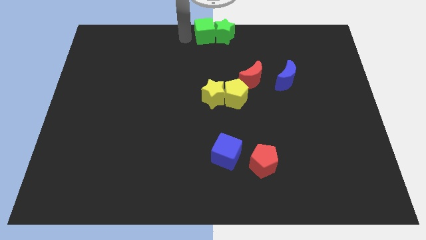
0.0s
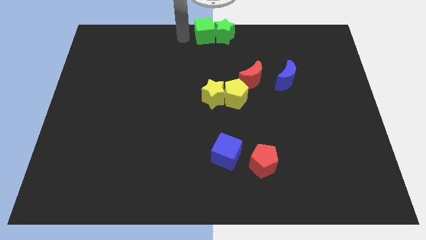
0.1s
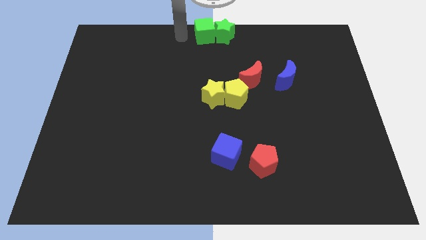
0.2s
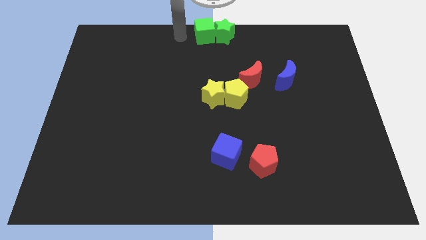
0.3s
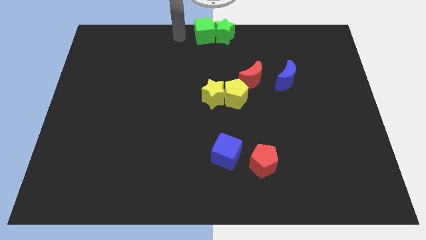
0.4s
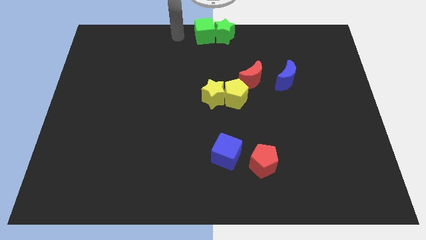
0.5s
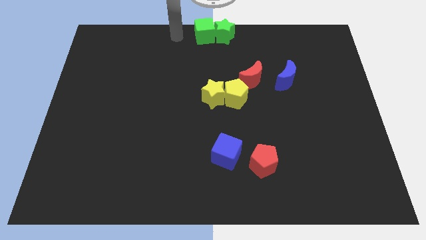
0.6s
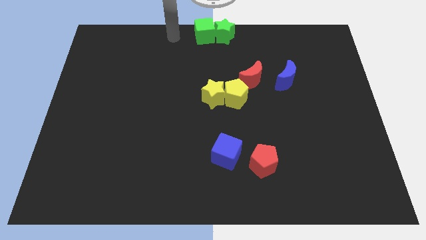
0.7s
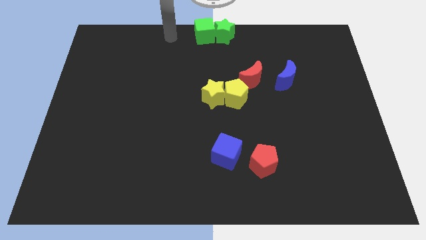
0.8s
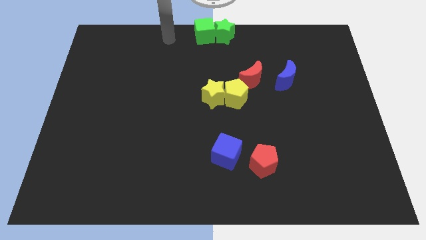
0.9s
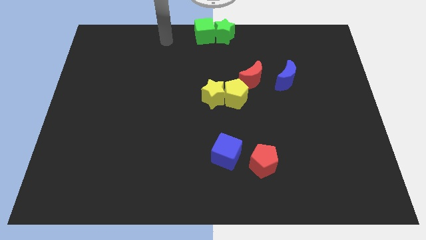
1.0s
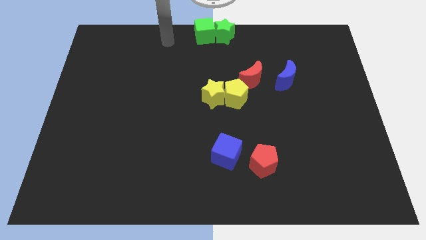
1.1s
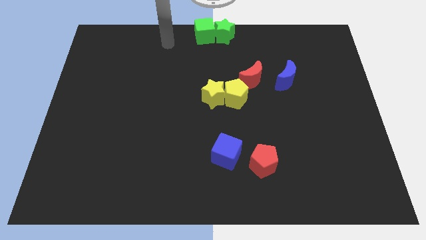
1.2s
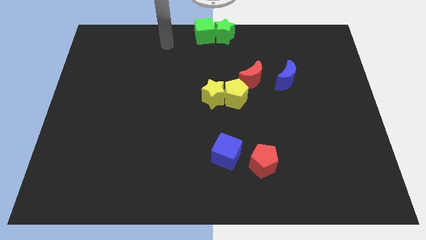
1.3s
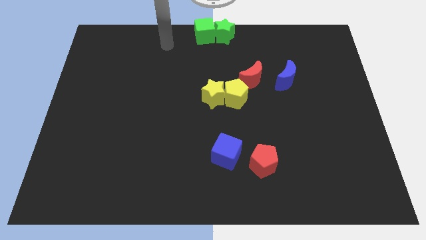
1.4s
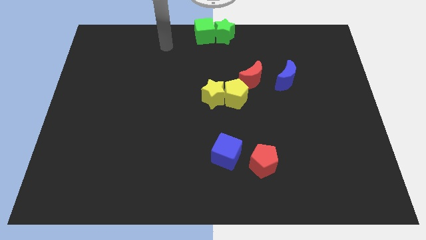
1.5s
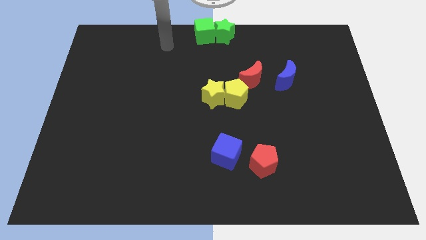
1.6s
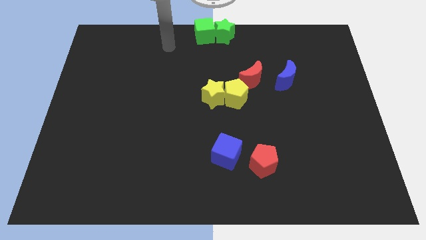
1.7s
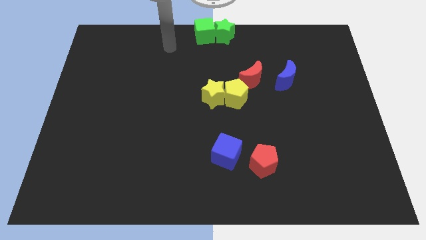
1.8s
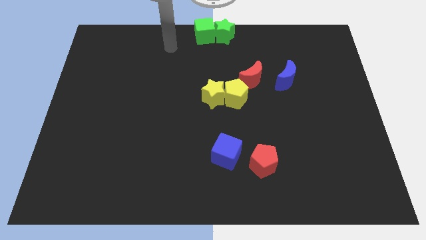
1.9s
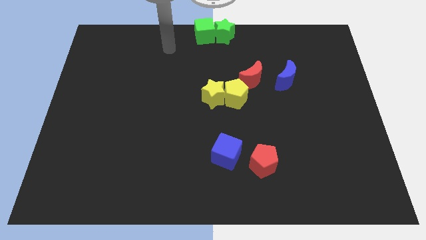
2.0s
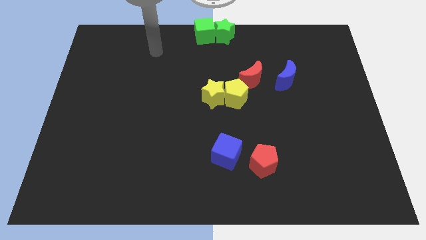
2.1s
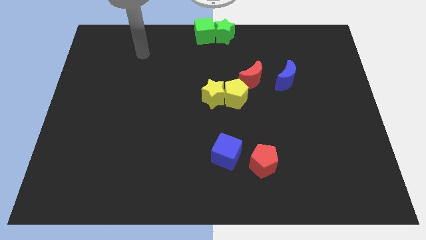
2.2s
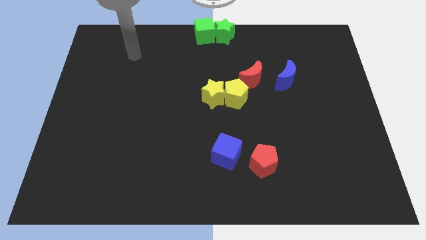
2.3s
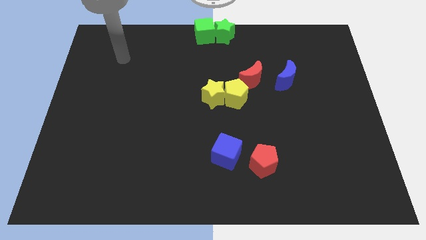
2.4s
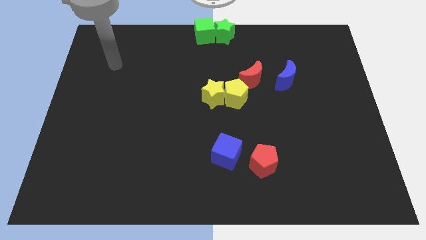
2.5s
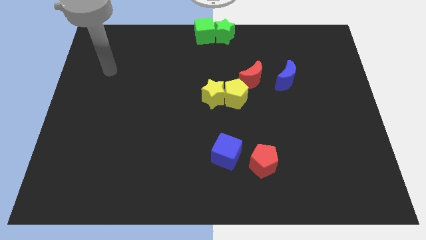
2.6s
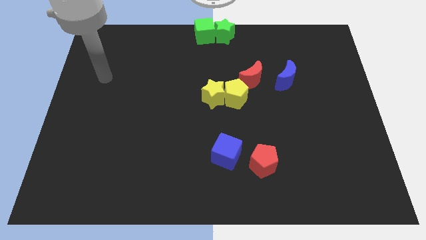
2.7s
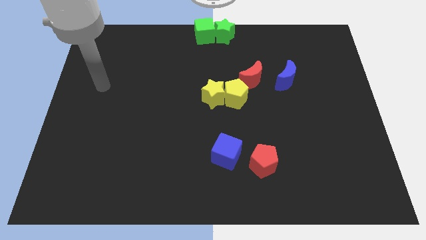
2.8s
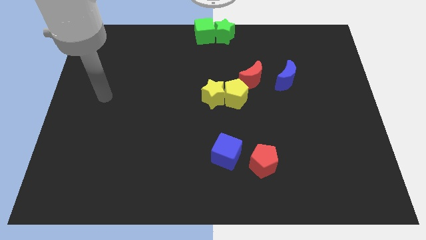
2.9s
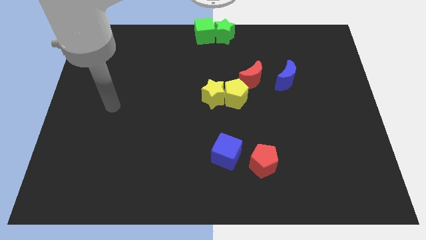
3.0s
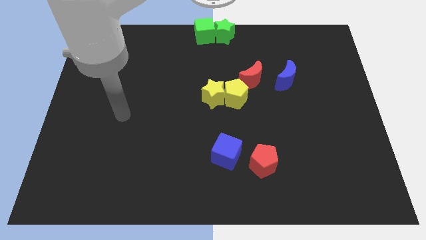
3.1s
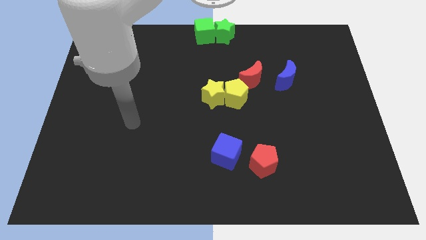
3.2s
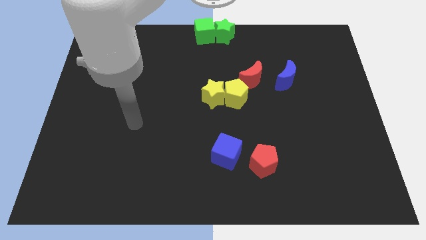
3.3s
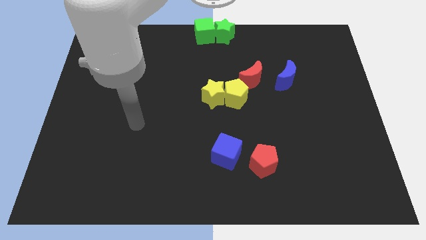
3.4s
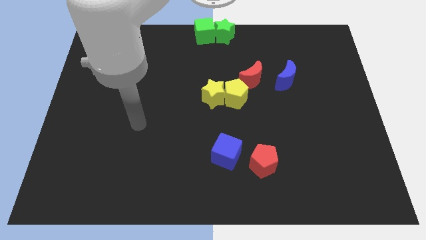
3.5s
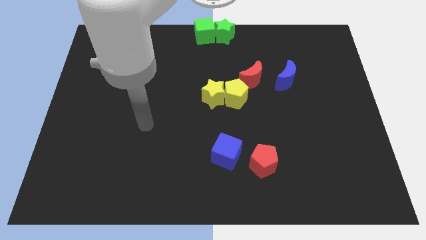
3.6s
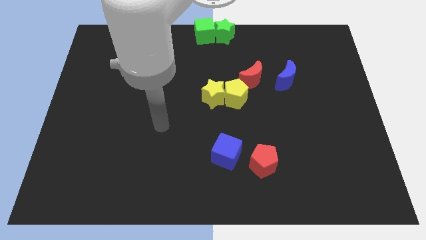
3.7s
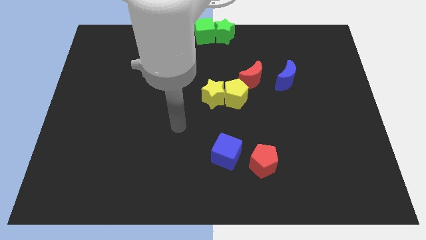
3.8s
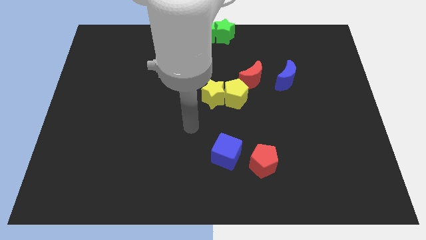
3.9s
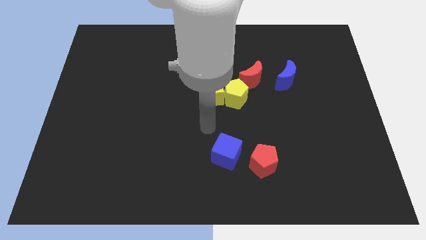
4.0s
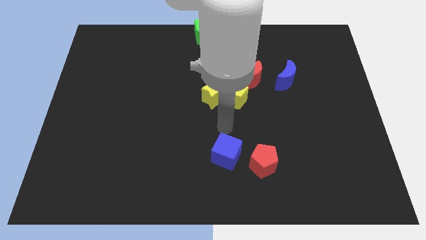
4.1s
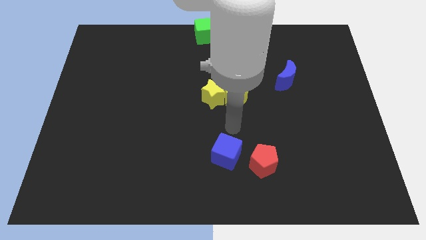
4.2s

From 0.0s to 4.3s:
point your arm in between the blue cube and yellow pentagon

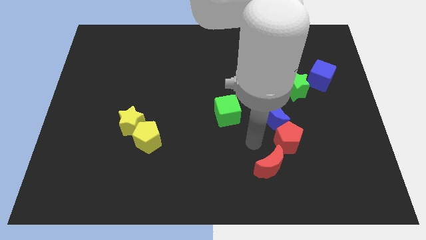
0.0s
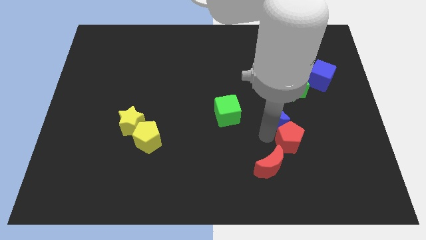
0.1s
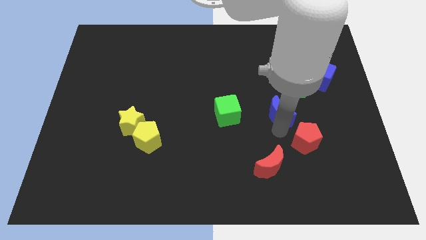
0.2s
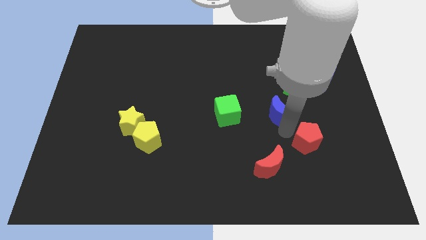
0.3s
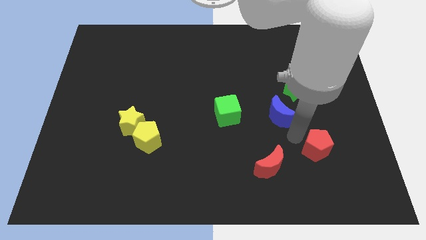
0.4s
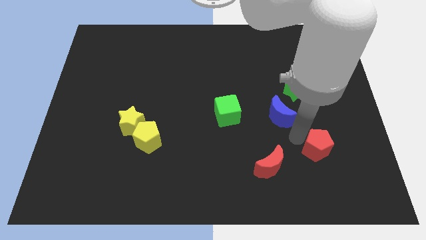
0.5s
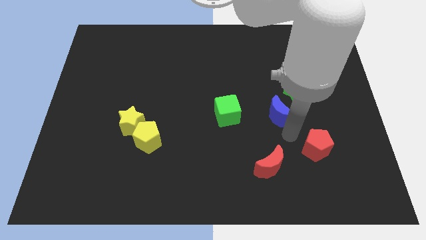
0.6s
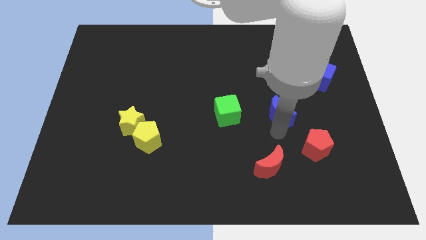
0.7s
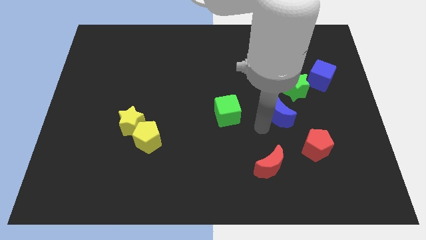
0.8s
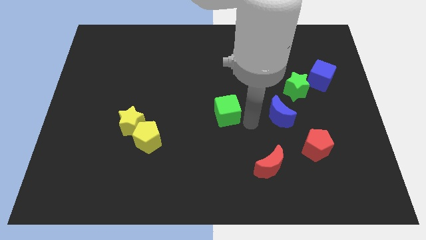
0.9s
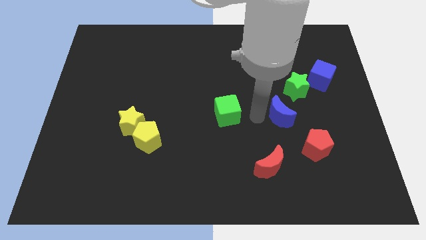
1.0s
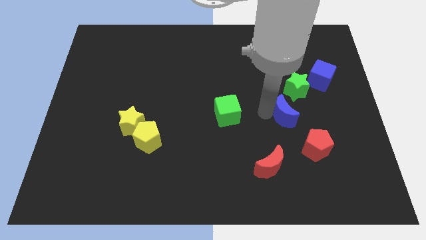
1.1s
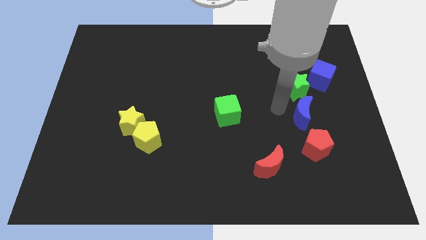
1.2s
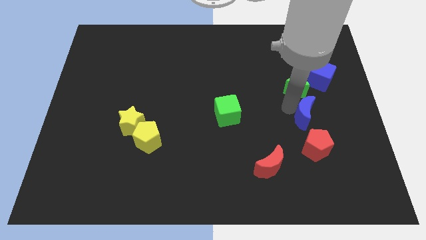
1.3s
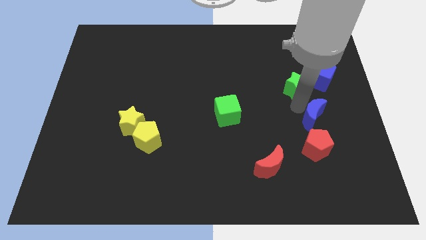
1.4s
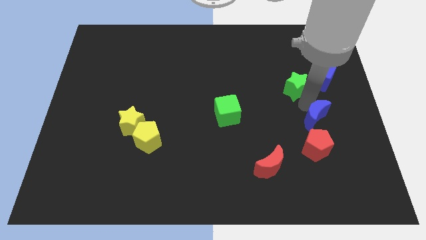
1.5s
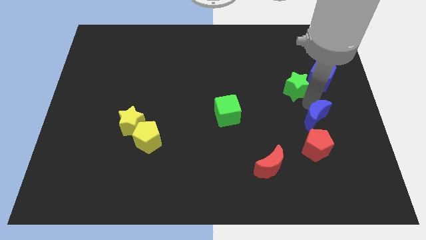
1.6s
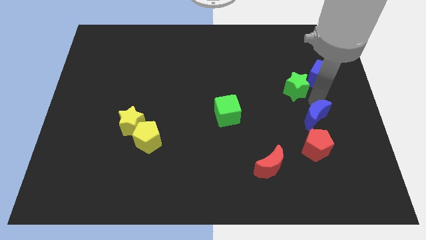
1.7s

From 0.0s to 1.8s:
place the blue moon above the red pentagon

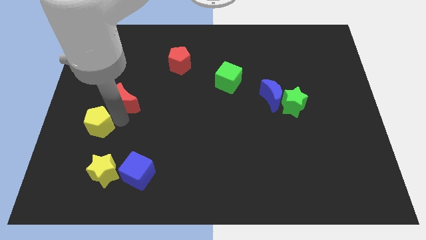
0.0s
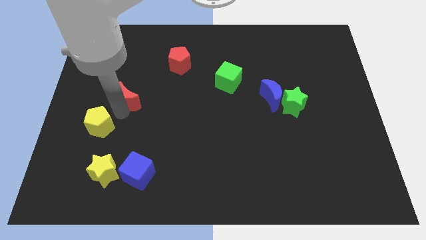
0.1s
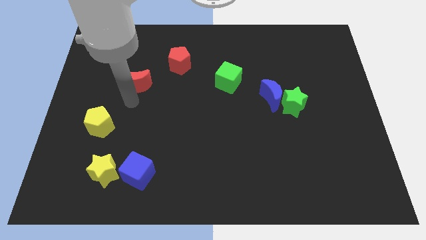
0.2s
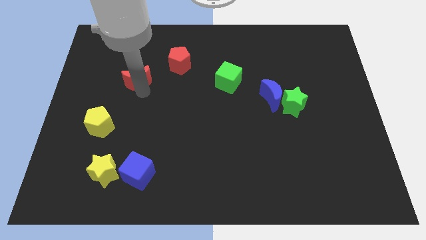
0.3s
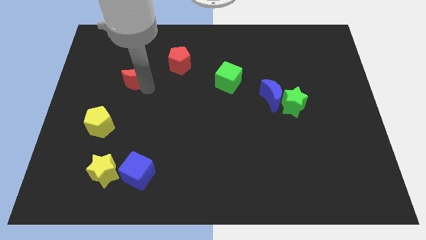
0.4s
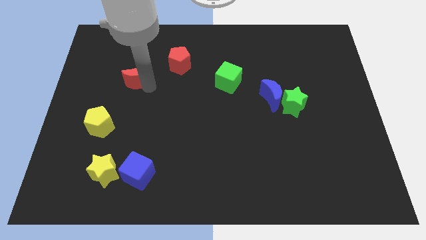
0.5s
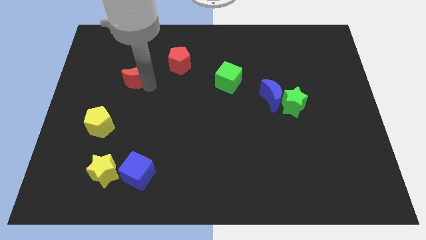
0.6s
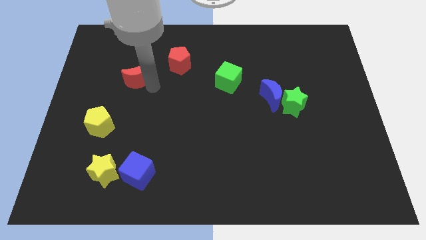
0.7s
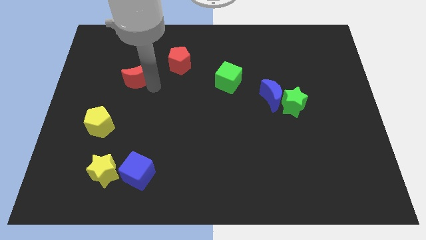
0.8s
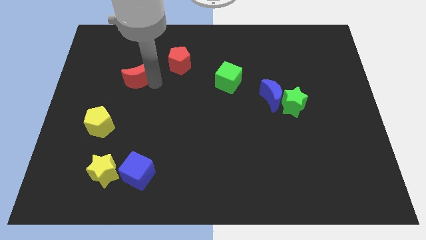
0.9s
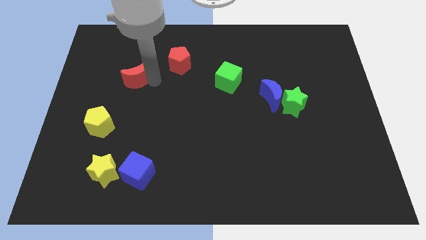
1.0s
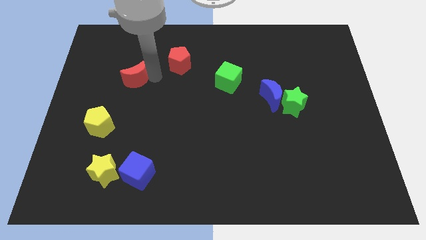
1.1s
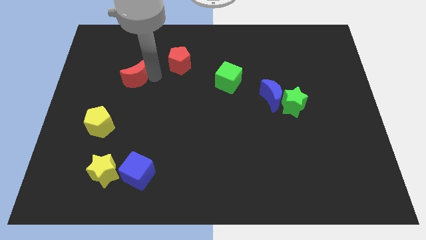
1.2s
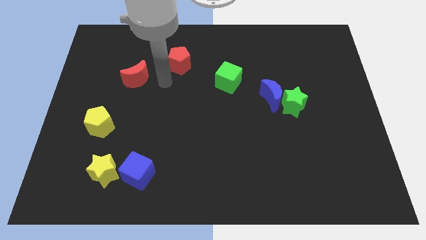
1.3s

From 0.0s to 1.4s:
push red crescent towards the red pentagon

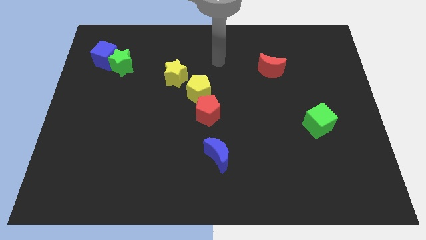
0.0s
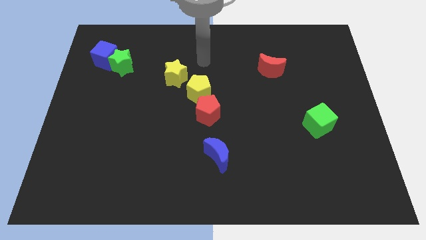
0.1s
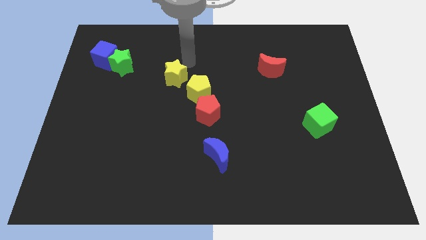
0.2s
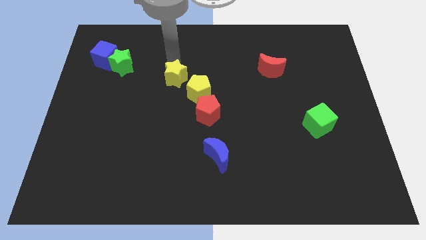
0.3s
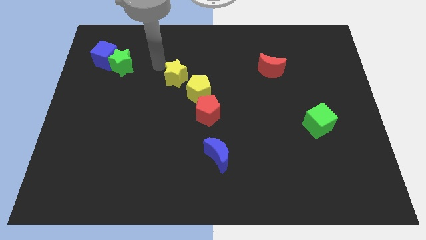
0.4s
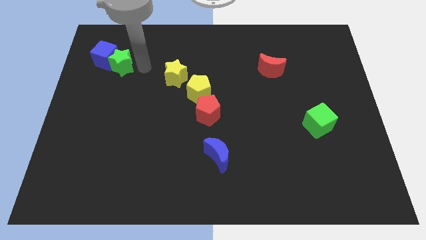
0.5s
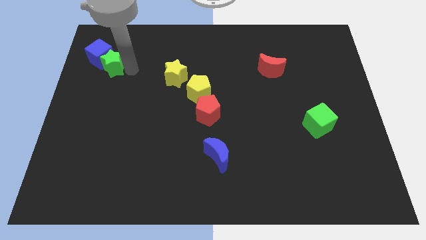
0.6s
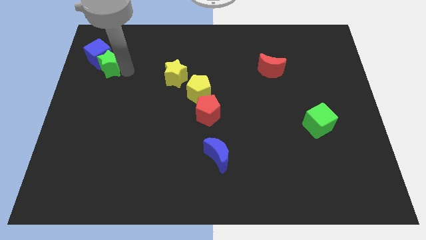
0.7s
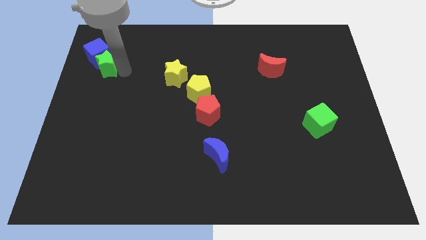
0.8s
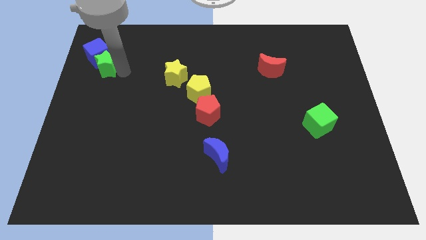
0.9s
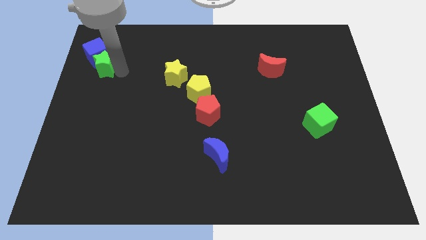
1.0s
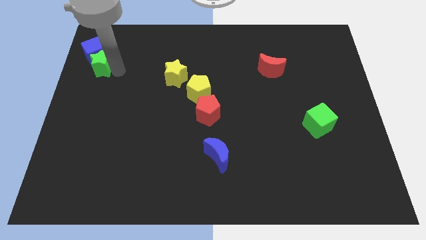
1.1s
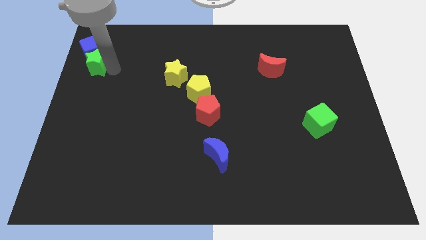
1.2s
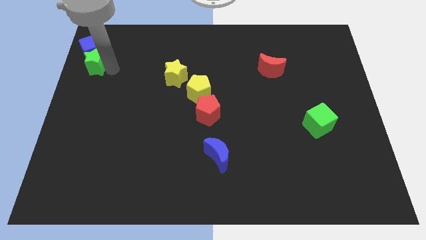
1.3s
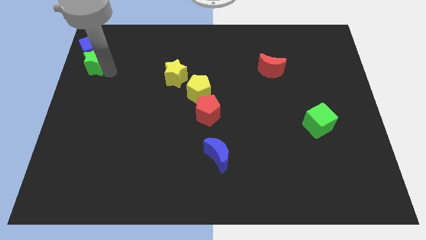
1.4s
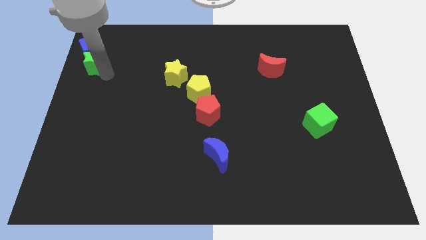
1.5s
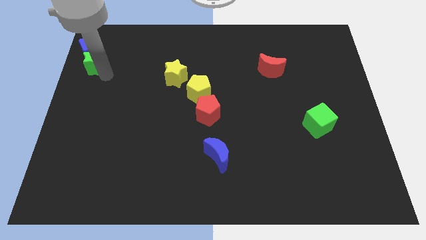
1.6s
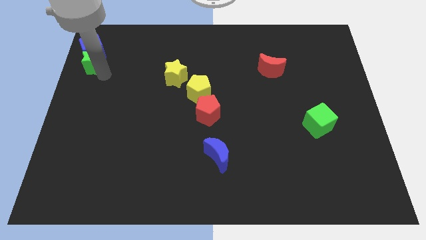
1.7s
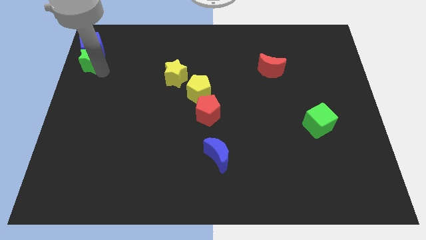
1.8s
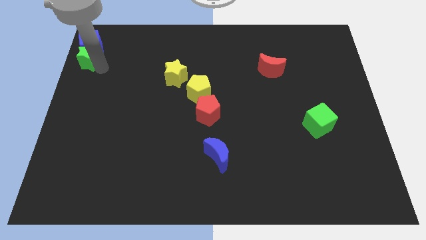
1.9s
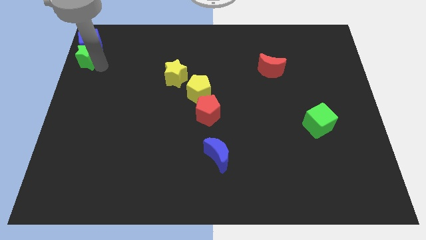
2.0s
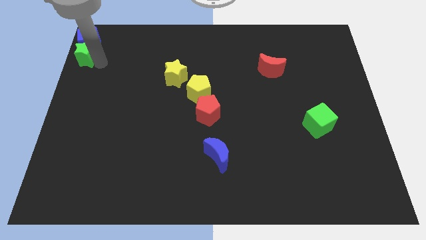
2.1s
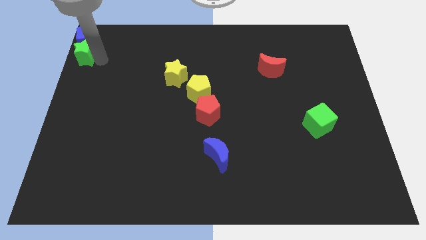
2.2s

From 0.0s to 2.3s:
push the green star and blue cube to the top left side of the board
